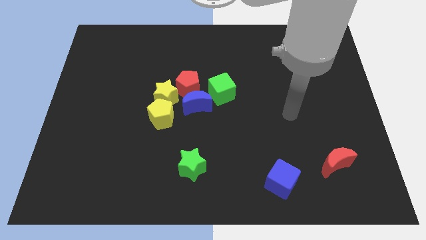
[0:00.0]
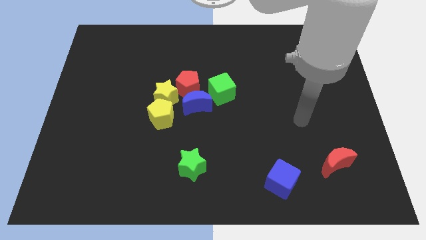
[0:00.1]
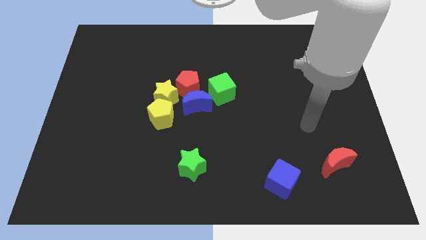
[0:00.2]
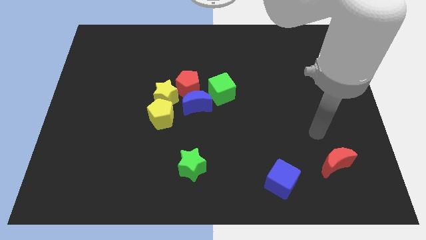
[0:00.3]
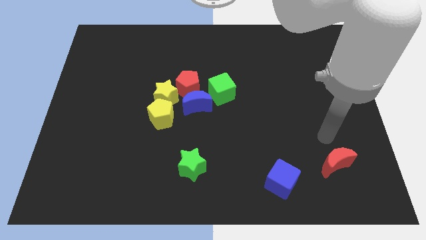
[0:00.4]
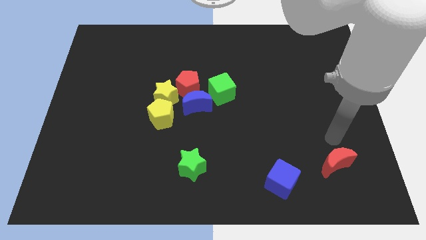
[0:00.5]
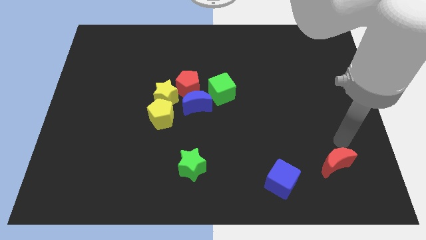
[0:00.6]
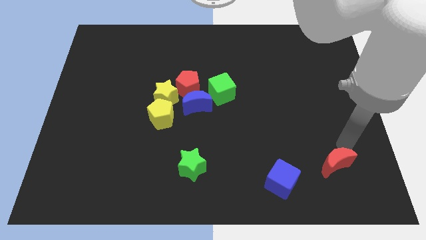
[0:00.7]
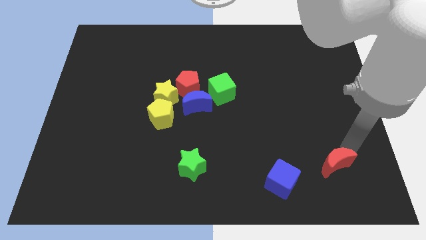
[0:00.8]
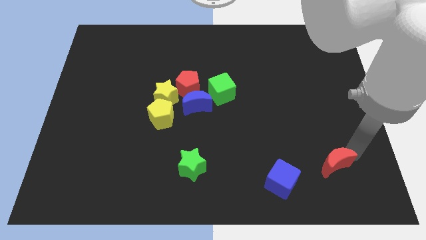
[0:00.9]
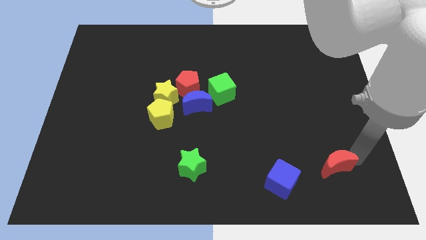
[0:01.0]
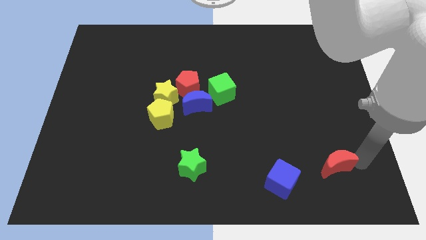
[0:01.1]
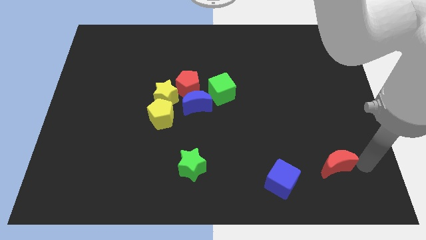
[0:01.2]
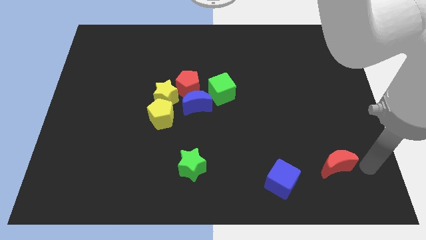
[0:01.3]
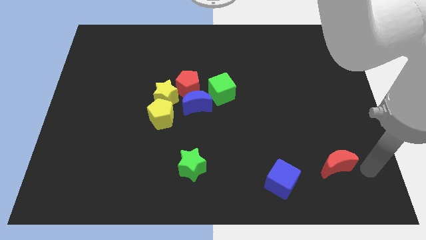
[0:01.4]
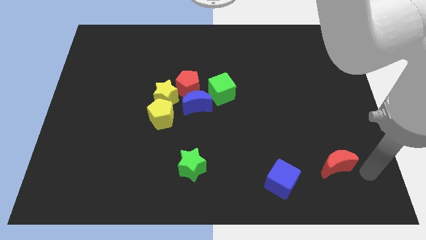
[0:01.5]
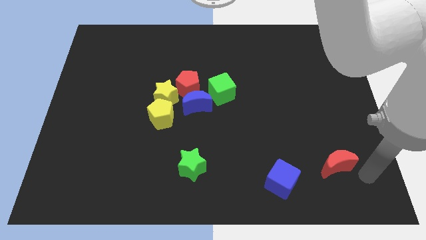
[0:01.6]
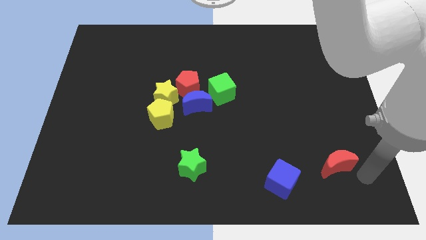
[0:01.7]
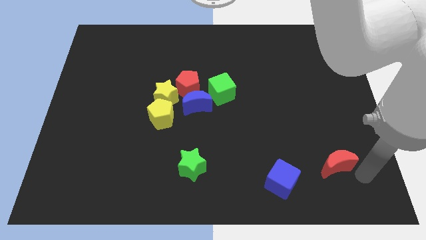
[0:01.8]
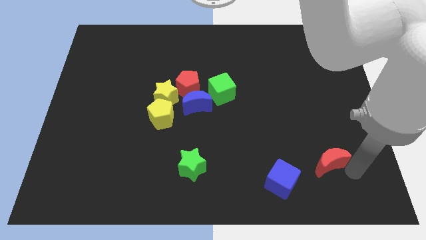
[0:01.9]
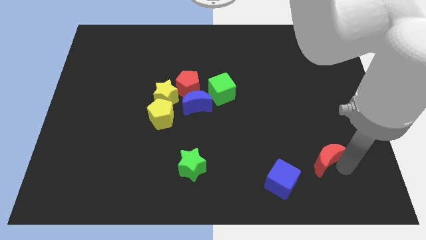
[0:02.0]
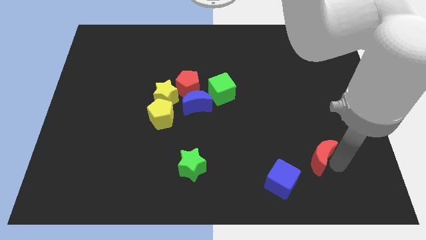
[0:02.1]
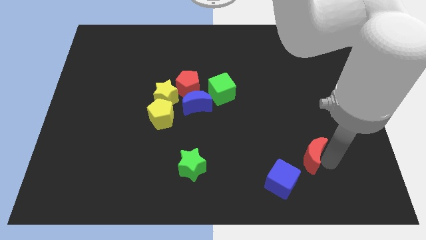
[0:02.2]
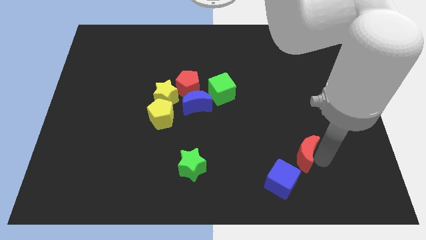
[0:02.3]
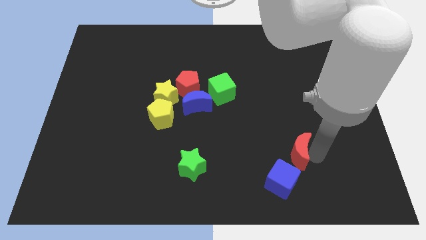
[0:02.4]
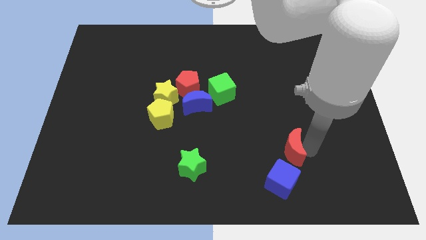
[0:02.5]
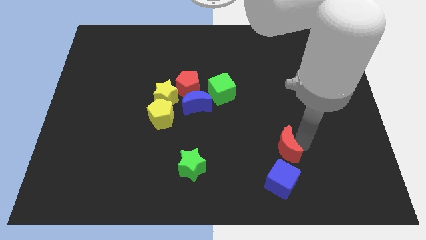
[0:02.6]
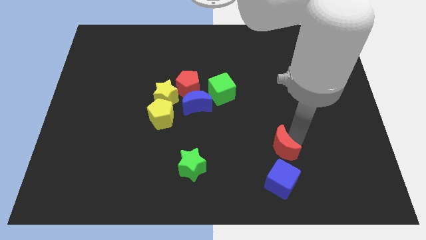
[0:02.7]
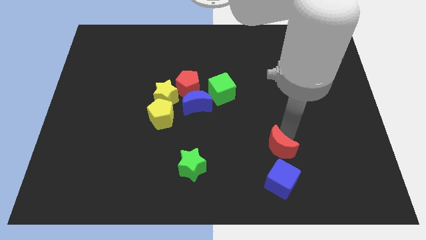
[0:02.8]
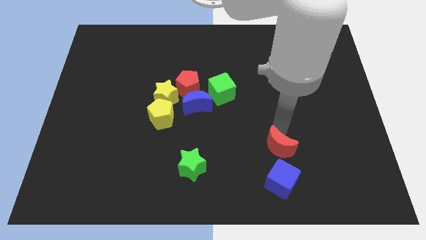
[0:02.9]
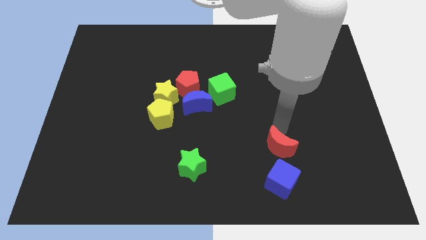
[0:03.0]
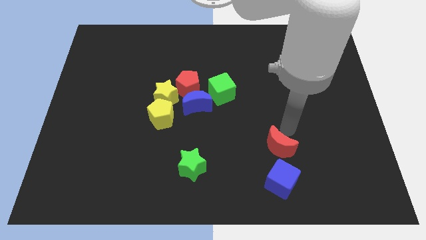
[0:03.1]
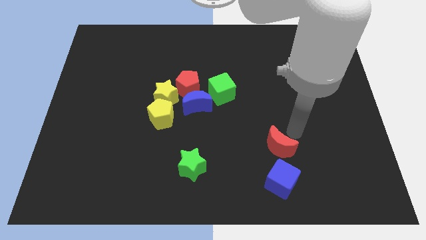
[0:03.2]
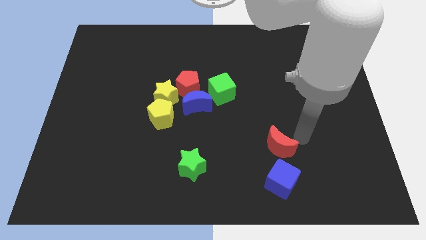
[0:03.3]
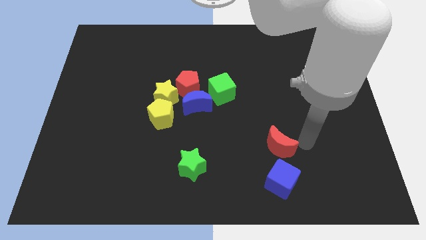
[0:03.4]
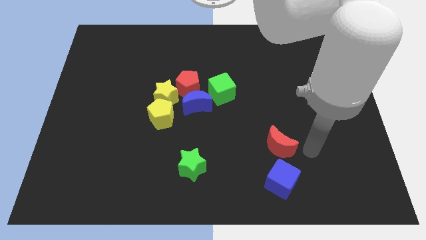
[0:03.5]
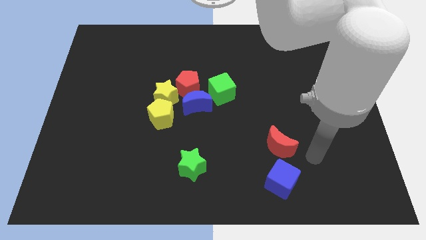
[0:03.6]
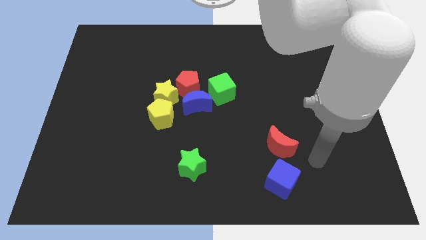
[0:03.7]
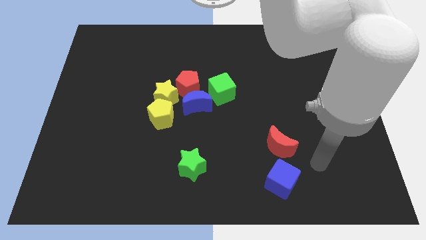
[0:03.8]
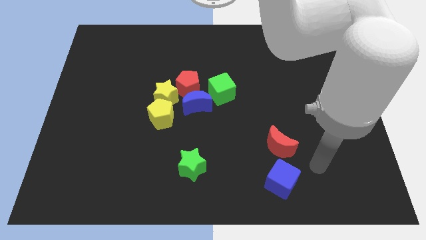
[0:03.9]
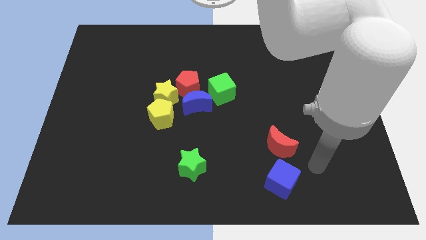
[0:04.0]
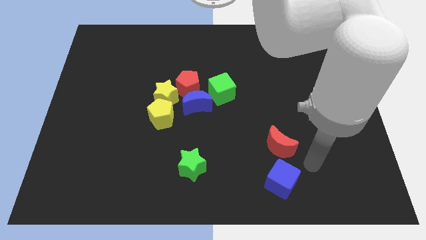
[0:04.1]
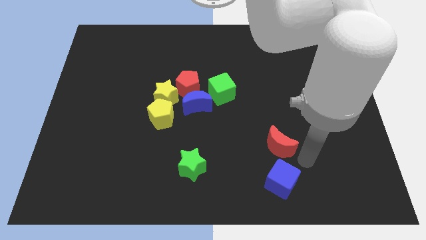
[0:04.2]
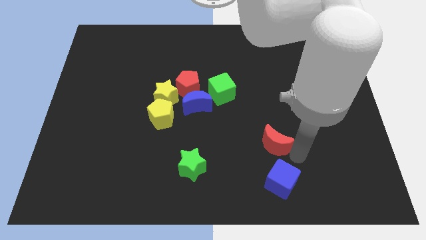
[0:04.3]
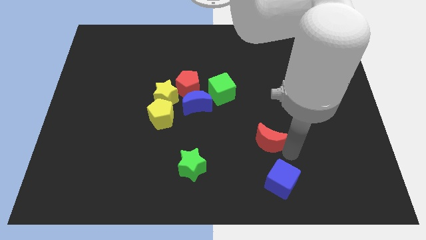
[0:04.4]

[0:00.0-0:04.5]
place the red crescent on top of the blue cube

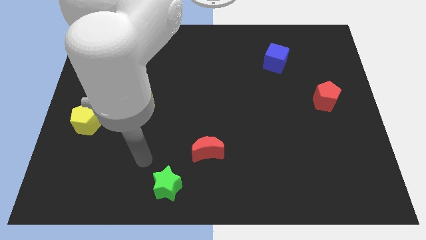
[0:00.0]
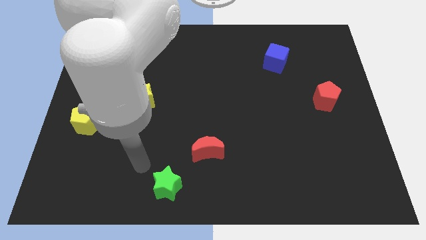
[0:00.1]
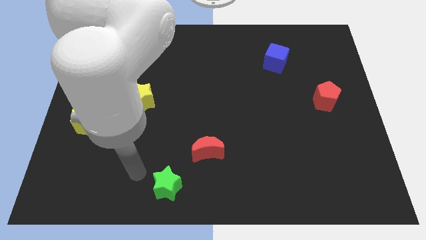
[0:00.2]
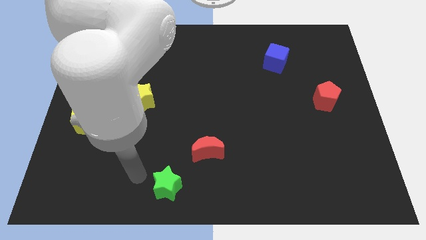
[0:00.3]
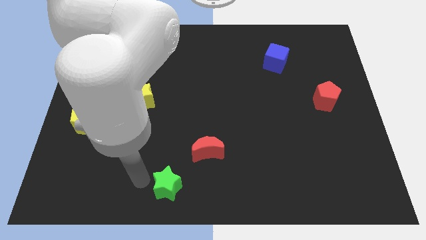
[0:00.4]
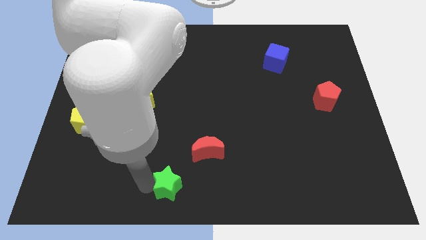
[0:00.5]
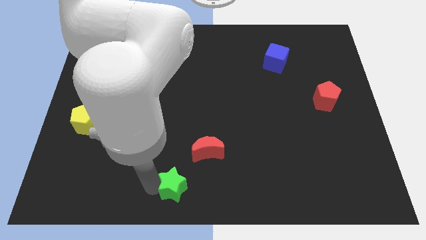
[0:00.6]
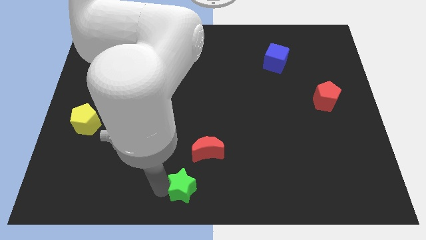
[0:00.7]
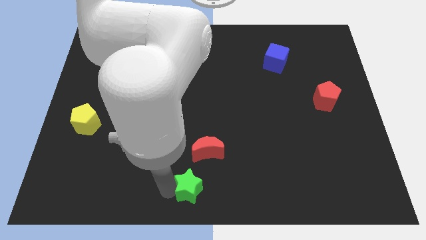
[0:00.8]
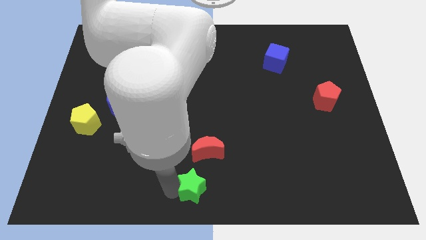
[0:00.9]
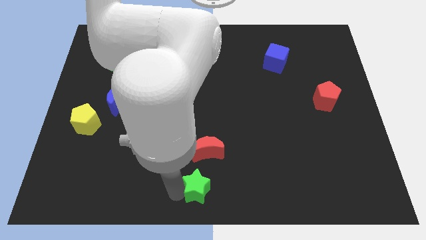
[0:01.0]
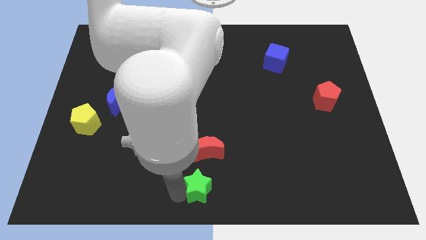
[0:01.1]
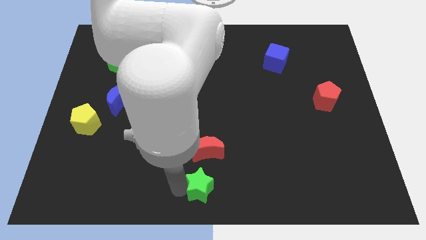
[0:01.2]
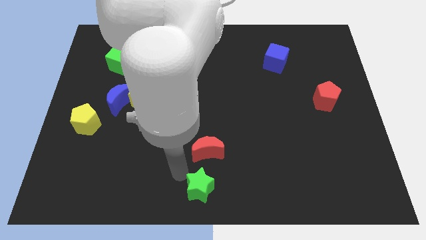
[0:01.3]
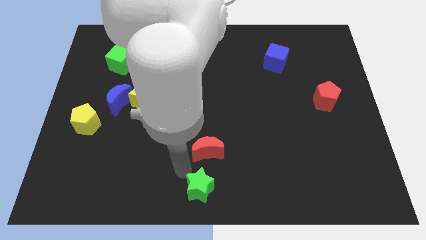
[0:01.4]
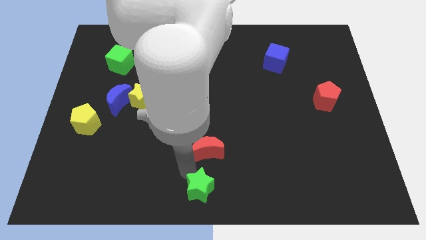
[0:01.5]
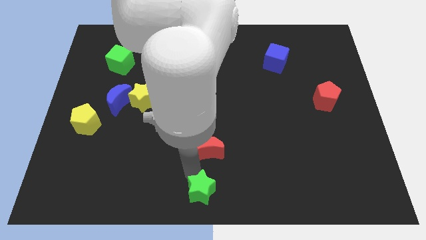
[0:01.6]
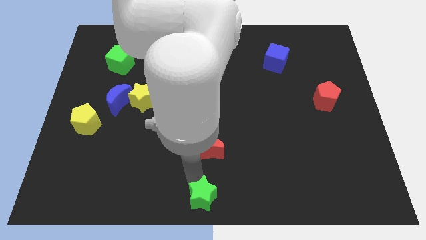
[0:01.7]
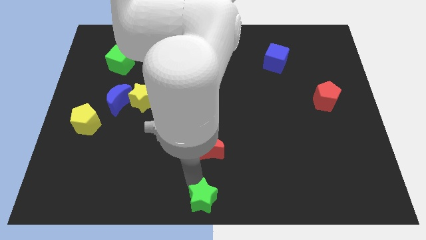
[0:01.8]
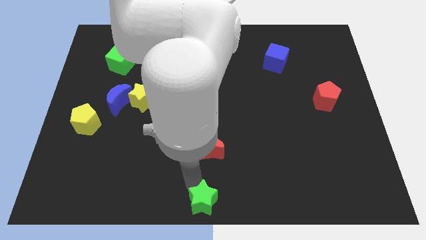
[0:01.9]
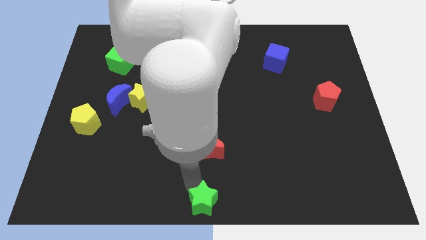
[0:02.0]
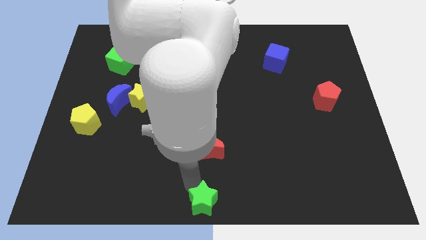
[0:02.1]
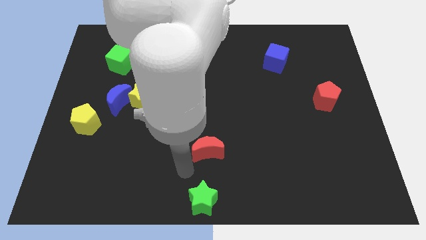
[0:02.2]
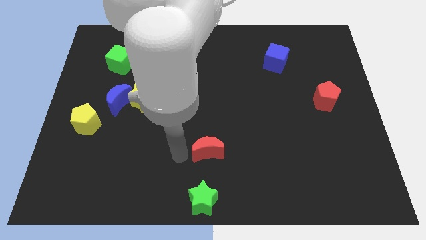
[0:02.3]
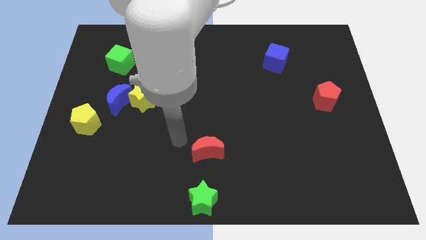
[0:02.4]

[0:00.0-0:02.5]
push the green star to the bottom center

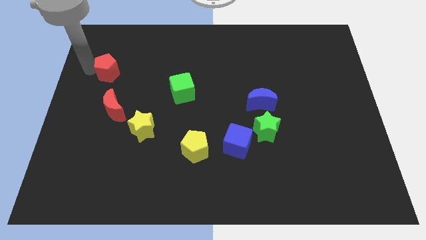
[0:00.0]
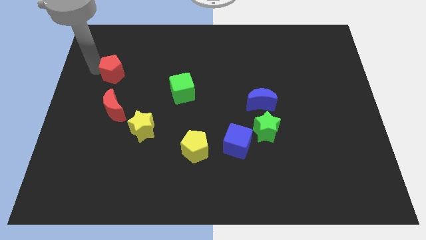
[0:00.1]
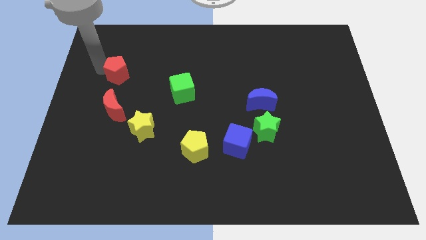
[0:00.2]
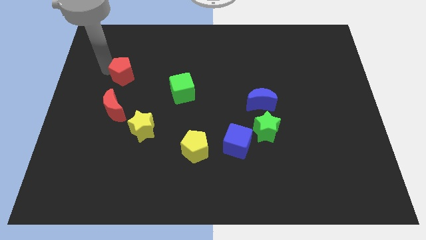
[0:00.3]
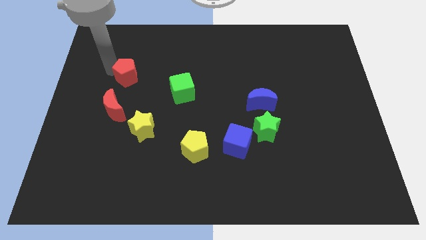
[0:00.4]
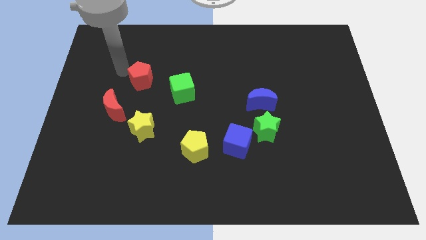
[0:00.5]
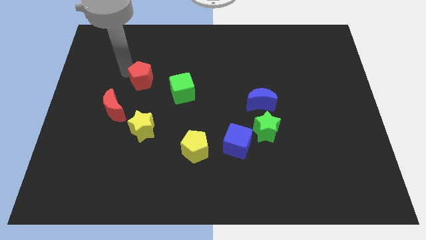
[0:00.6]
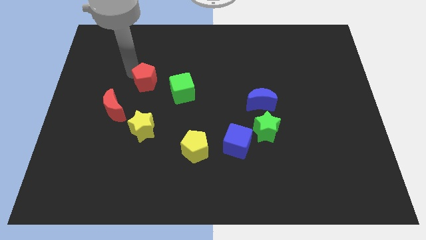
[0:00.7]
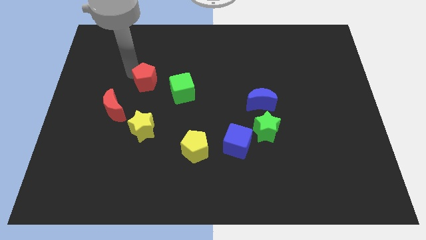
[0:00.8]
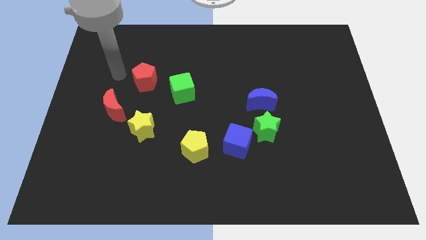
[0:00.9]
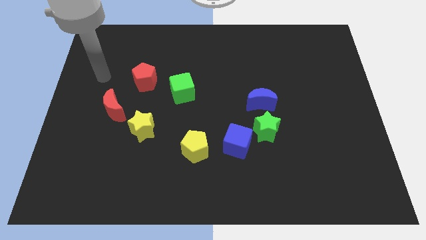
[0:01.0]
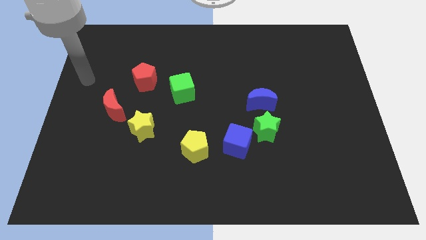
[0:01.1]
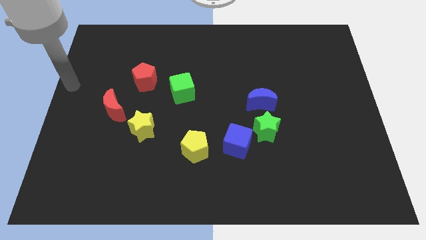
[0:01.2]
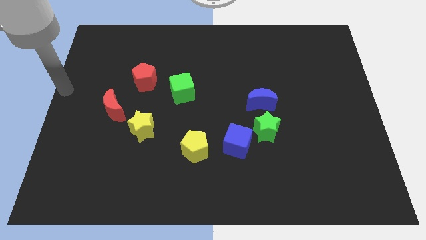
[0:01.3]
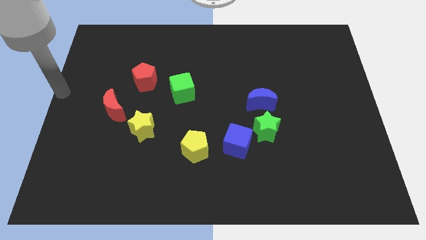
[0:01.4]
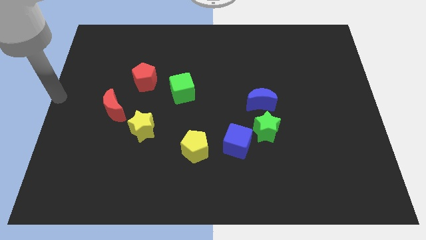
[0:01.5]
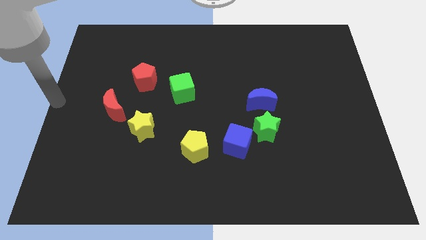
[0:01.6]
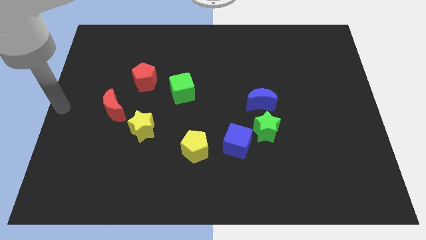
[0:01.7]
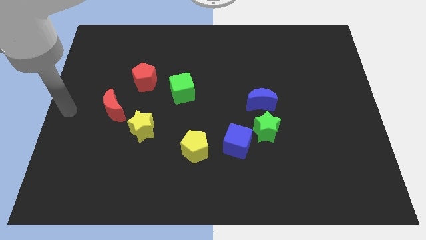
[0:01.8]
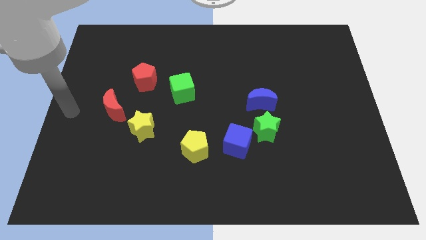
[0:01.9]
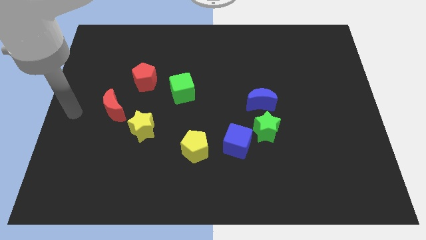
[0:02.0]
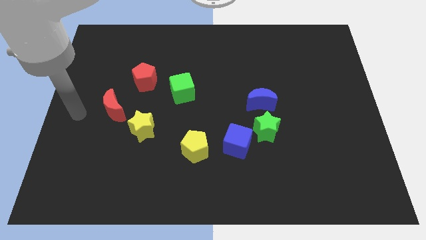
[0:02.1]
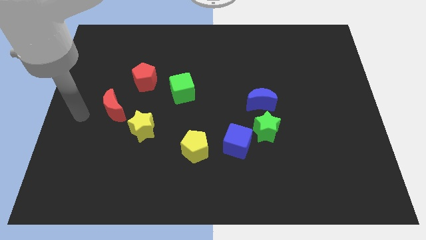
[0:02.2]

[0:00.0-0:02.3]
move the red pentagon vertically to the yellow star
